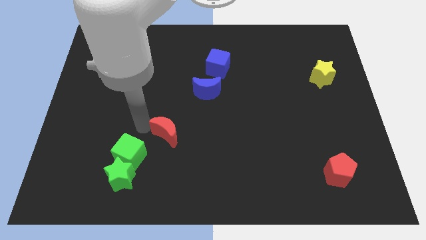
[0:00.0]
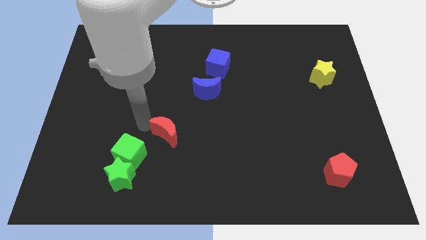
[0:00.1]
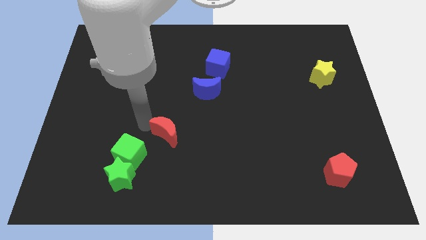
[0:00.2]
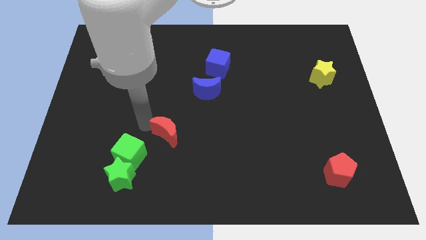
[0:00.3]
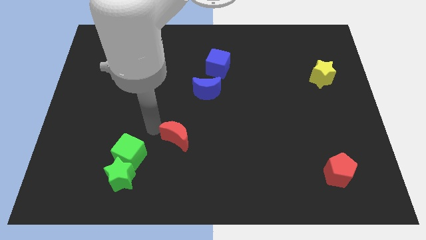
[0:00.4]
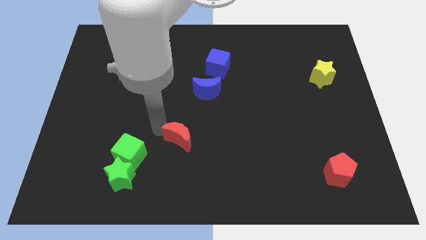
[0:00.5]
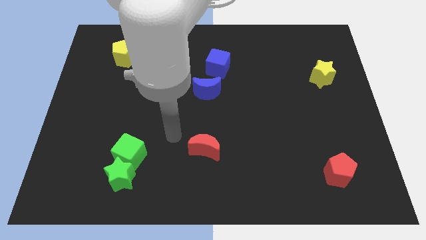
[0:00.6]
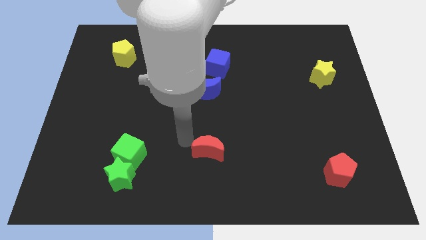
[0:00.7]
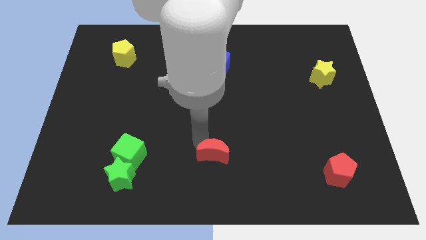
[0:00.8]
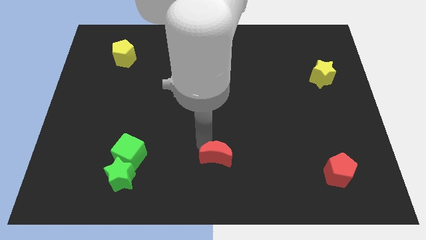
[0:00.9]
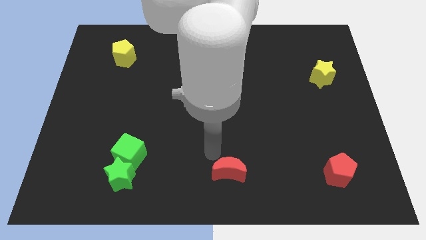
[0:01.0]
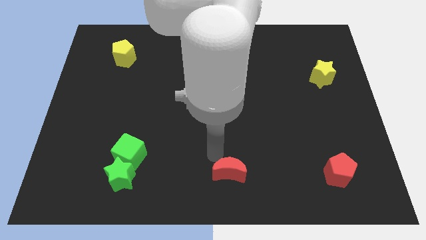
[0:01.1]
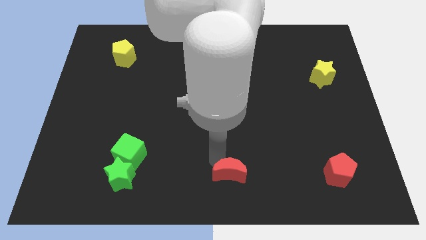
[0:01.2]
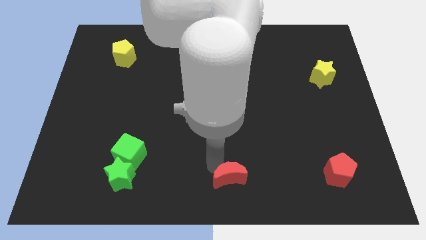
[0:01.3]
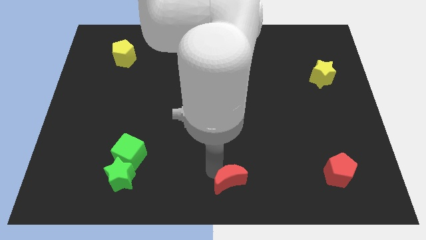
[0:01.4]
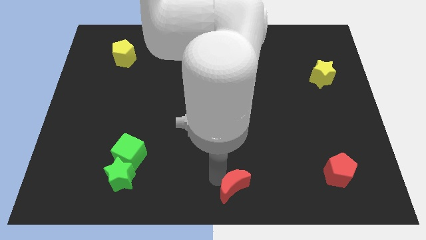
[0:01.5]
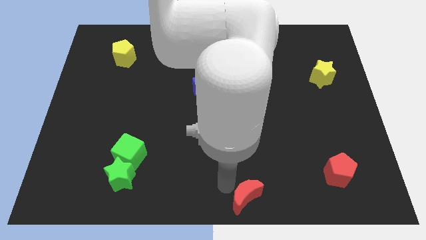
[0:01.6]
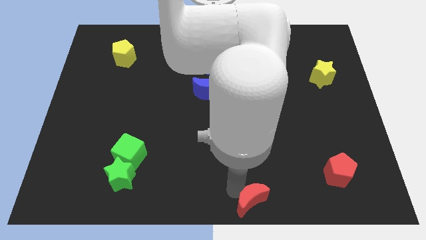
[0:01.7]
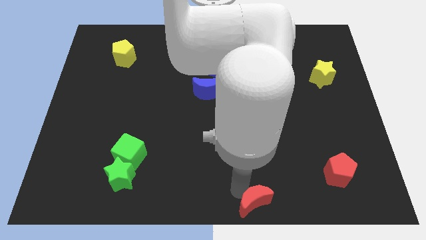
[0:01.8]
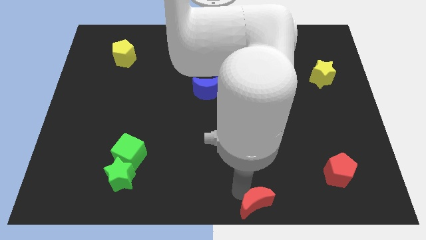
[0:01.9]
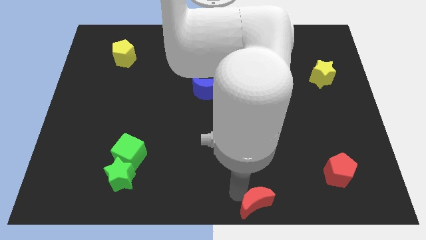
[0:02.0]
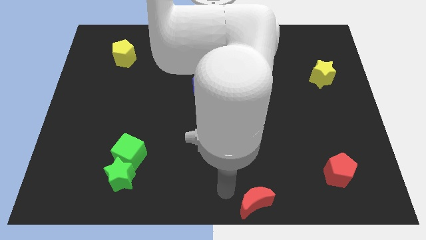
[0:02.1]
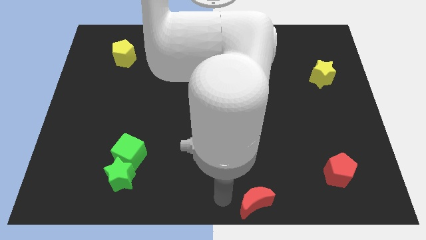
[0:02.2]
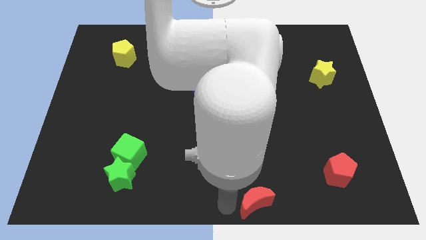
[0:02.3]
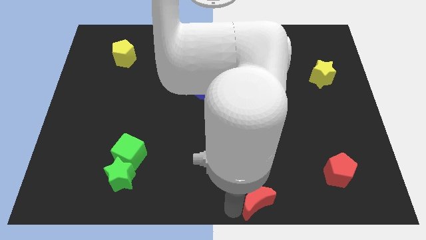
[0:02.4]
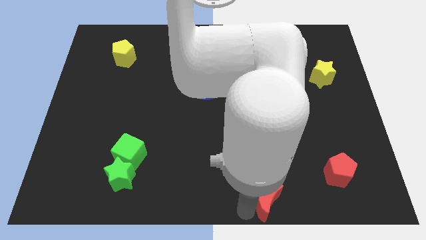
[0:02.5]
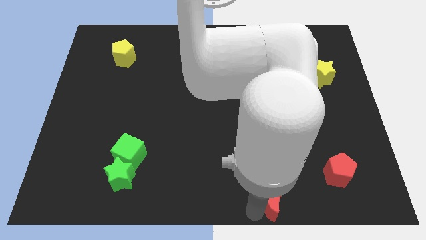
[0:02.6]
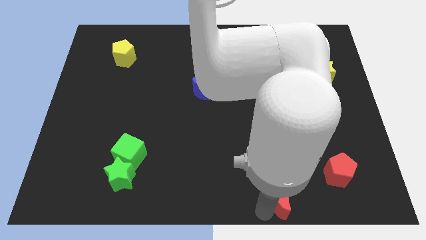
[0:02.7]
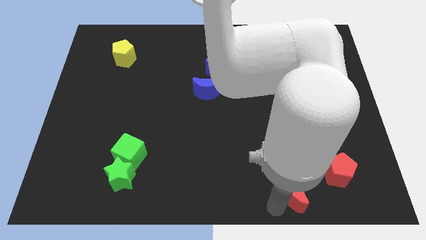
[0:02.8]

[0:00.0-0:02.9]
move red moon towards the bottom right of the table

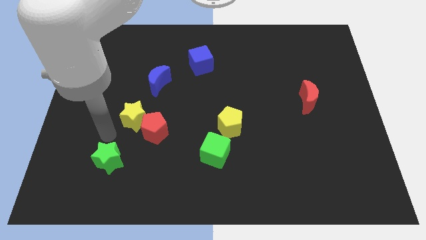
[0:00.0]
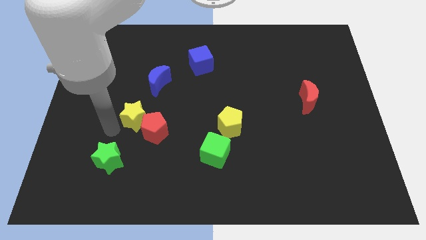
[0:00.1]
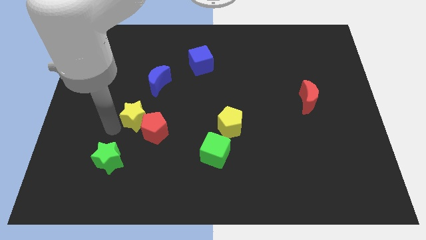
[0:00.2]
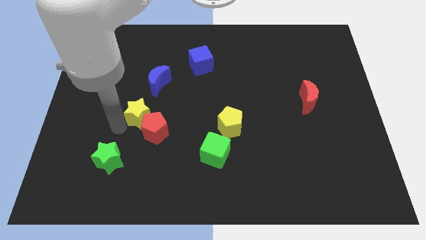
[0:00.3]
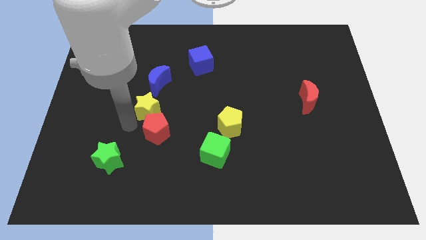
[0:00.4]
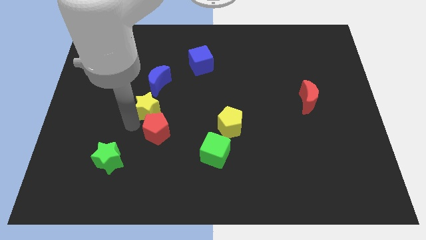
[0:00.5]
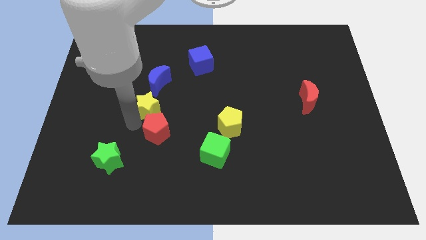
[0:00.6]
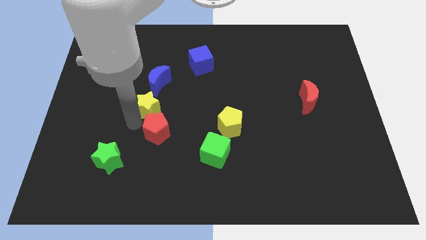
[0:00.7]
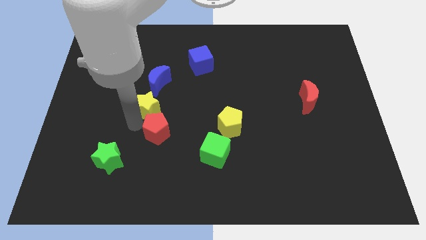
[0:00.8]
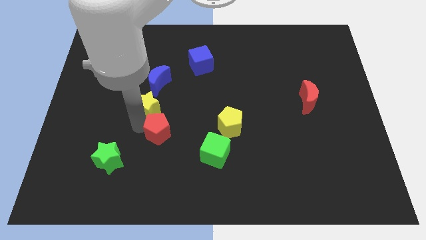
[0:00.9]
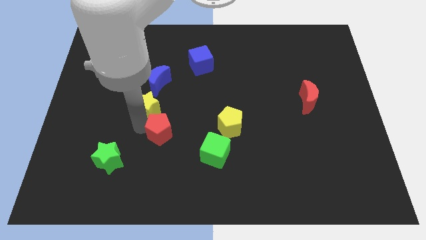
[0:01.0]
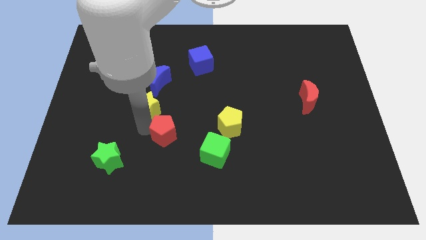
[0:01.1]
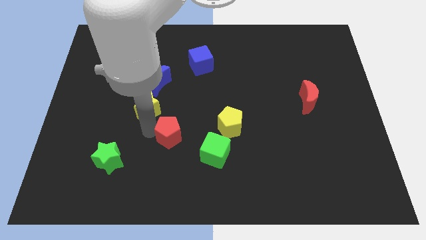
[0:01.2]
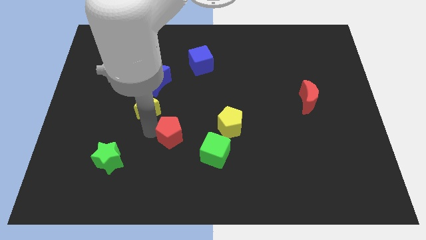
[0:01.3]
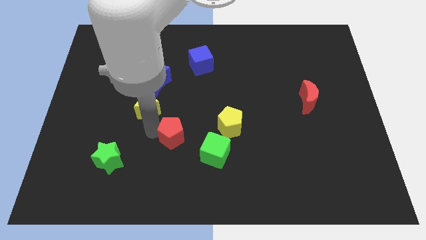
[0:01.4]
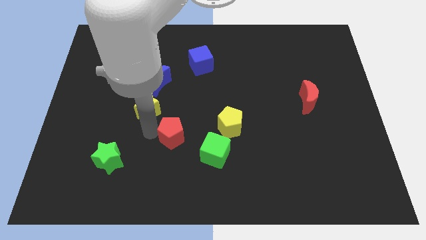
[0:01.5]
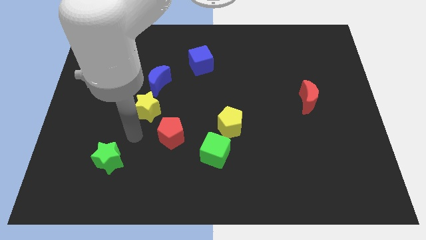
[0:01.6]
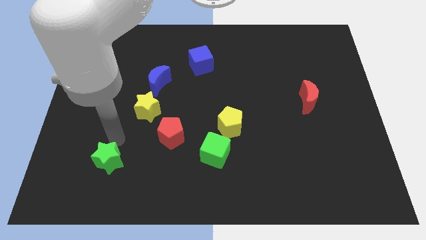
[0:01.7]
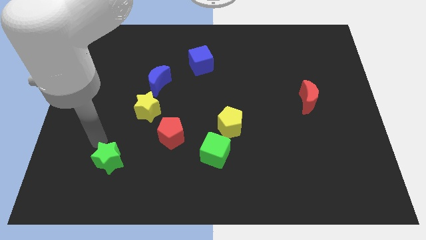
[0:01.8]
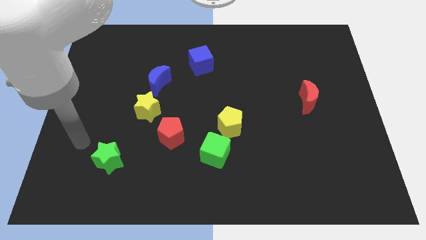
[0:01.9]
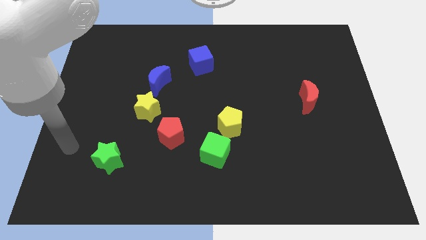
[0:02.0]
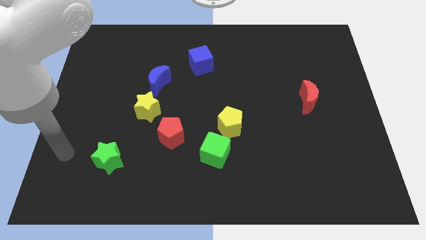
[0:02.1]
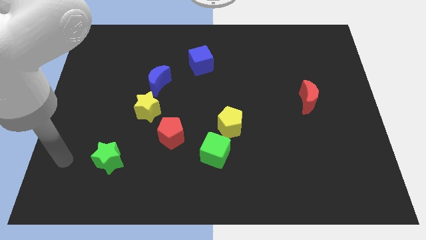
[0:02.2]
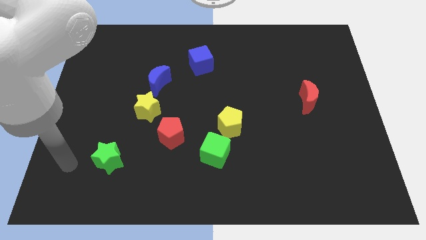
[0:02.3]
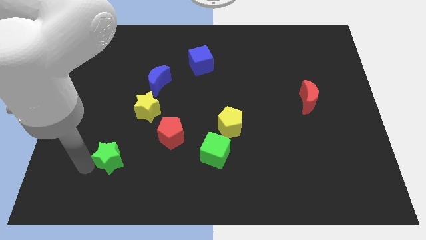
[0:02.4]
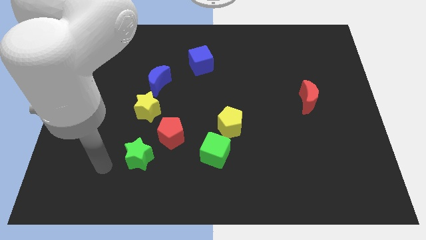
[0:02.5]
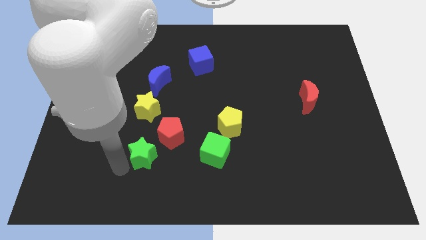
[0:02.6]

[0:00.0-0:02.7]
place the green star down to the yellow star

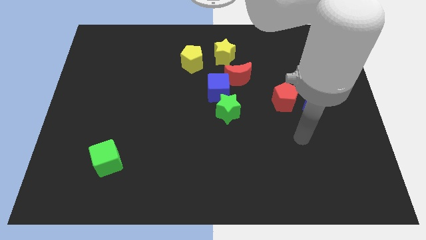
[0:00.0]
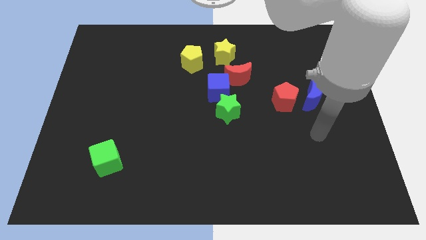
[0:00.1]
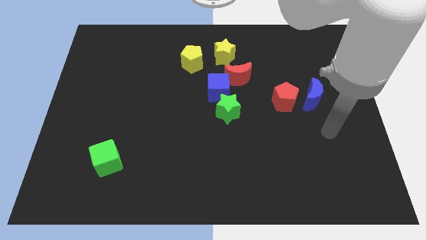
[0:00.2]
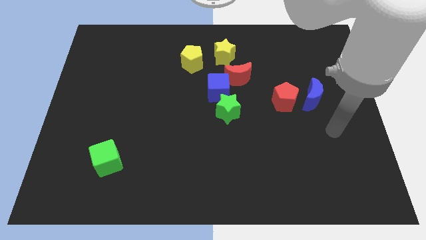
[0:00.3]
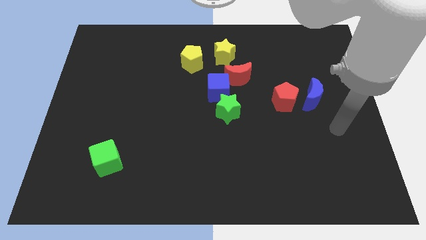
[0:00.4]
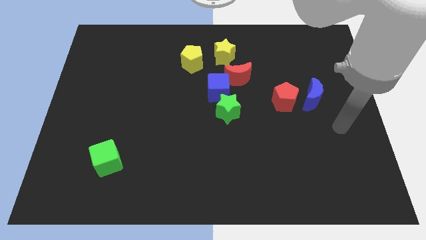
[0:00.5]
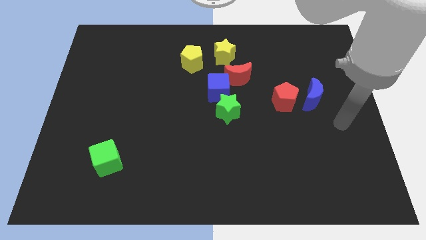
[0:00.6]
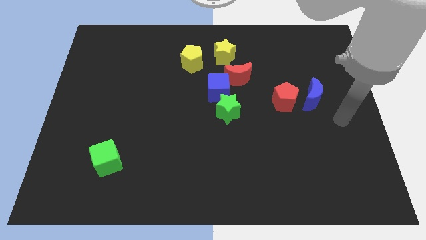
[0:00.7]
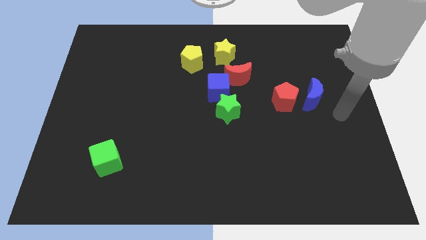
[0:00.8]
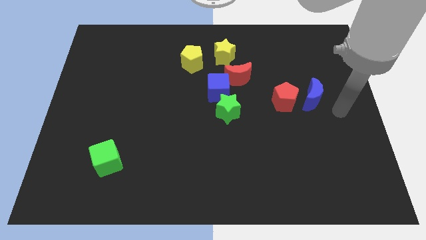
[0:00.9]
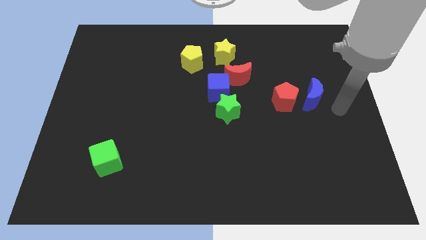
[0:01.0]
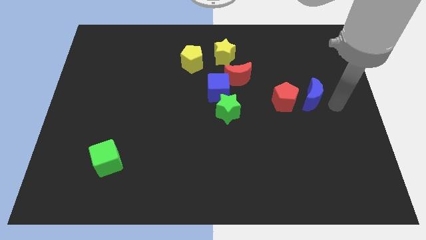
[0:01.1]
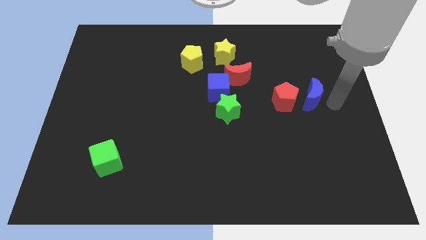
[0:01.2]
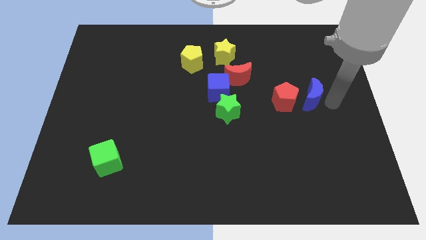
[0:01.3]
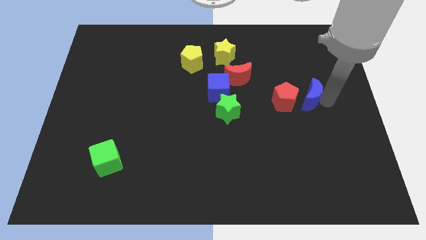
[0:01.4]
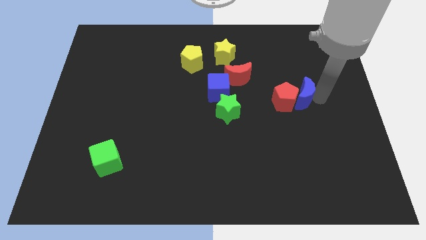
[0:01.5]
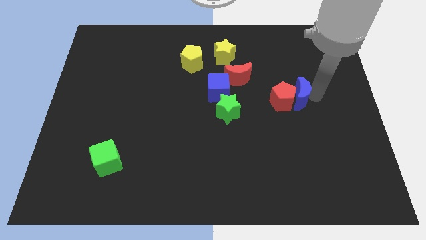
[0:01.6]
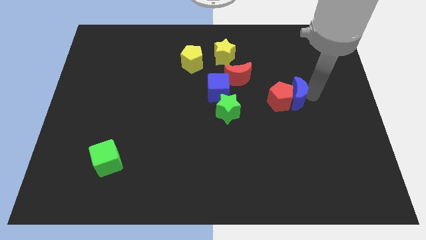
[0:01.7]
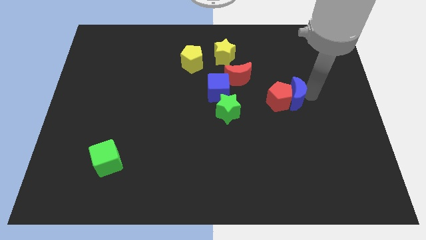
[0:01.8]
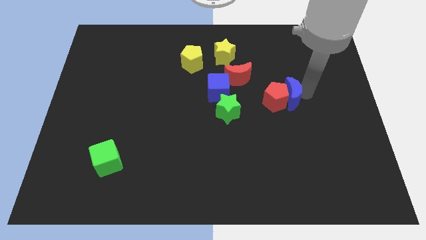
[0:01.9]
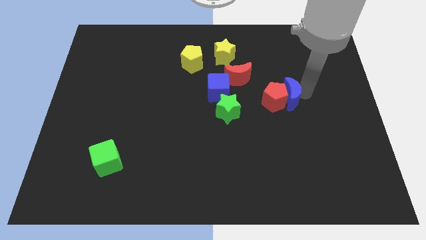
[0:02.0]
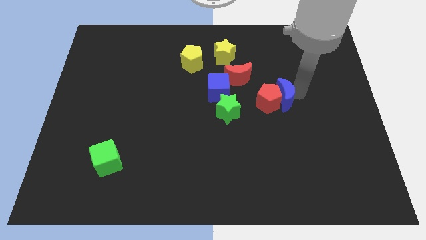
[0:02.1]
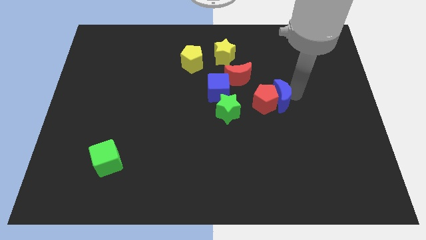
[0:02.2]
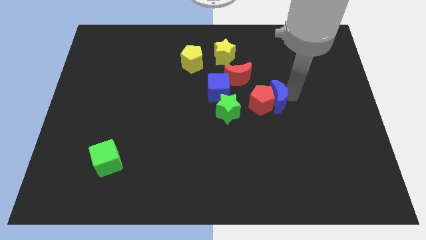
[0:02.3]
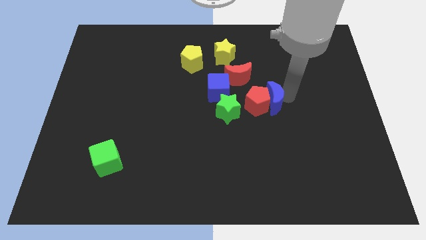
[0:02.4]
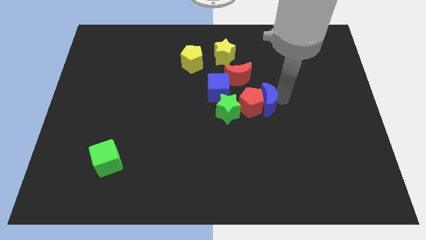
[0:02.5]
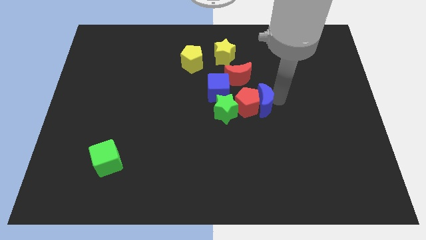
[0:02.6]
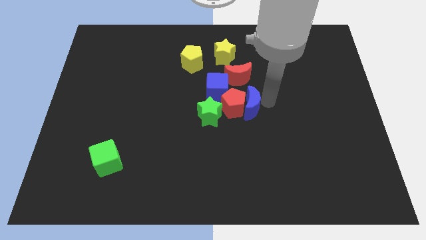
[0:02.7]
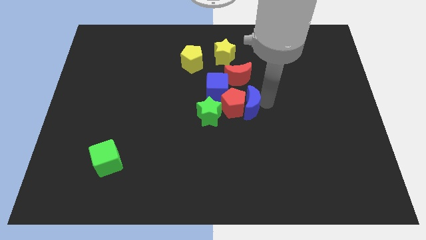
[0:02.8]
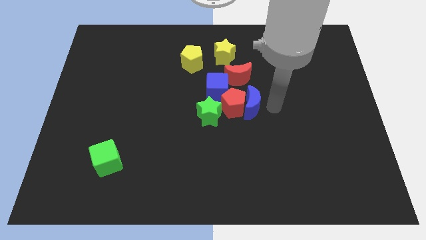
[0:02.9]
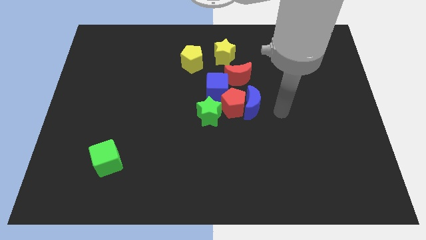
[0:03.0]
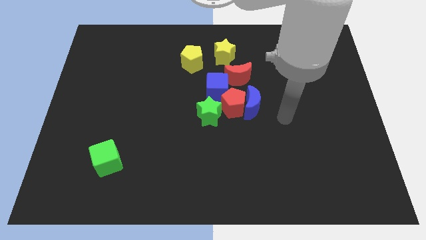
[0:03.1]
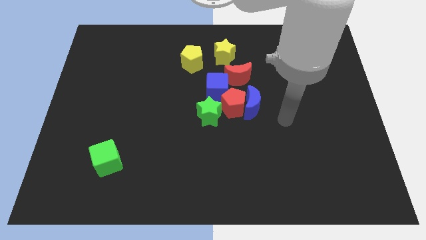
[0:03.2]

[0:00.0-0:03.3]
place red pentagon to the bottom of red moon
